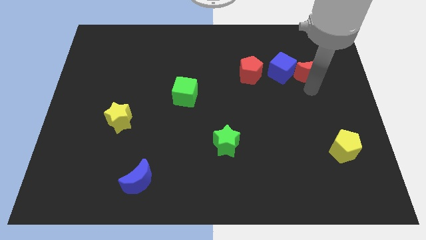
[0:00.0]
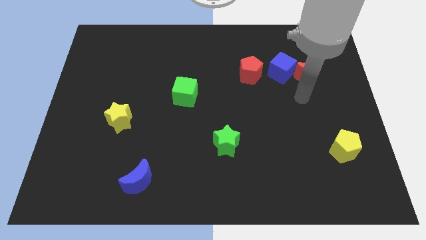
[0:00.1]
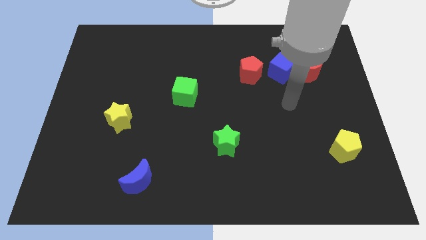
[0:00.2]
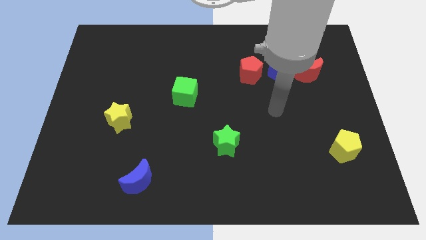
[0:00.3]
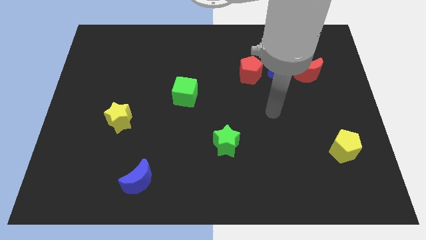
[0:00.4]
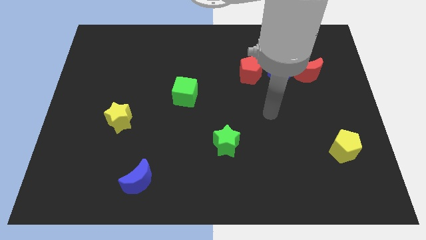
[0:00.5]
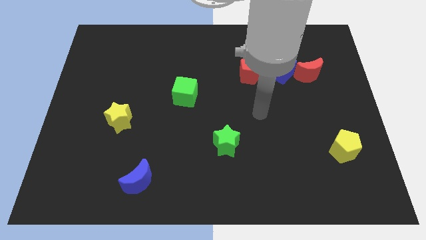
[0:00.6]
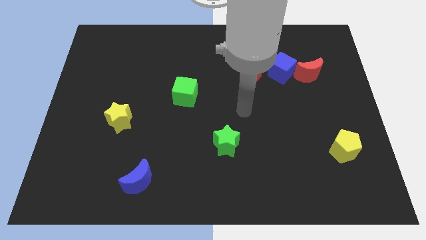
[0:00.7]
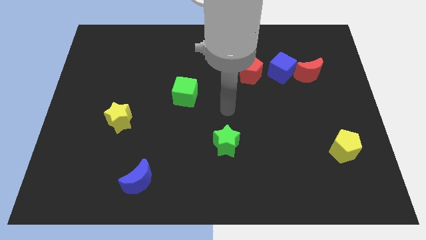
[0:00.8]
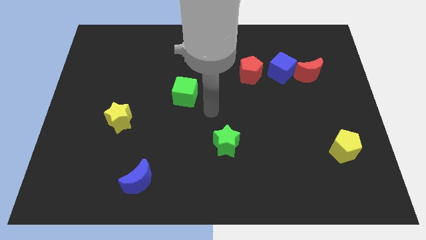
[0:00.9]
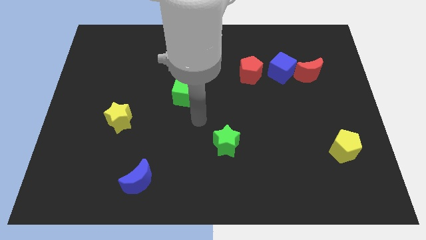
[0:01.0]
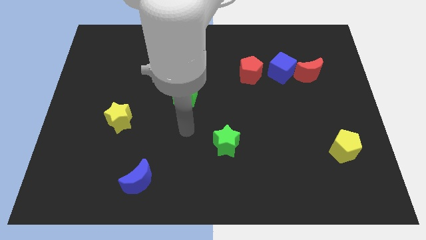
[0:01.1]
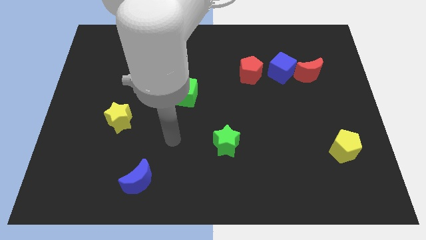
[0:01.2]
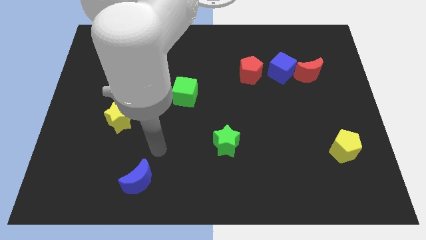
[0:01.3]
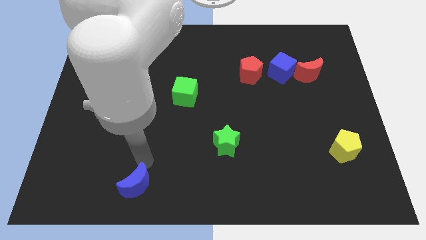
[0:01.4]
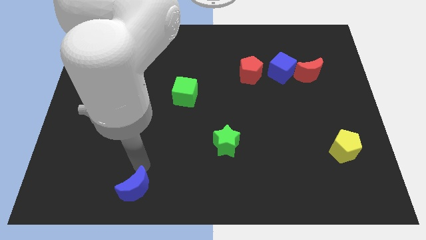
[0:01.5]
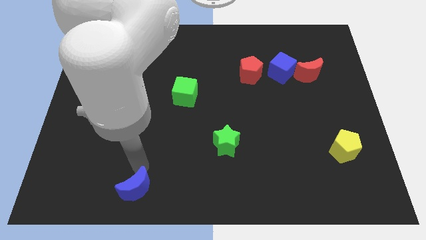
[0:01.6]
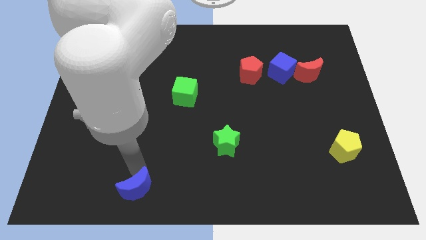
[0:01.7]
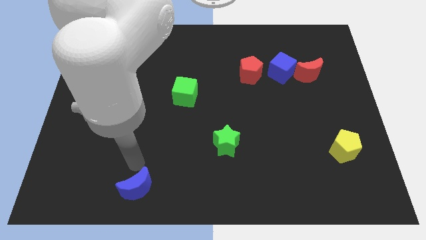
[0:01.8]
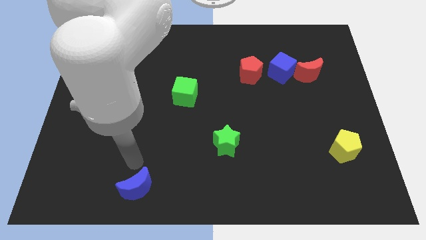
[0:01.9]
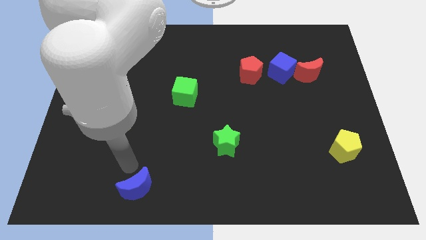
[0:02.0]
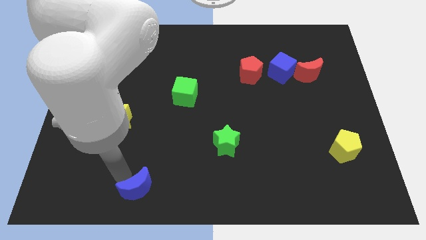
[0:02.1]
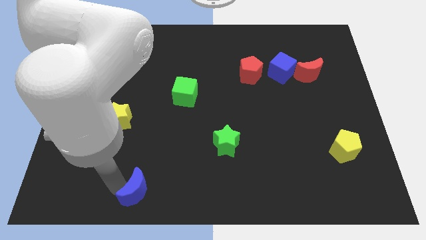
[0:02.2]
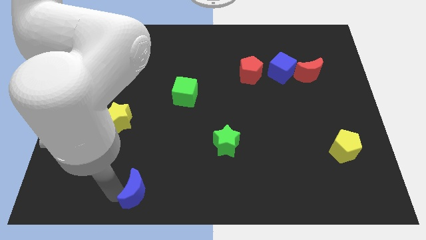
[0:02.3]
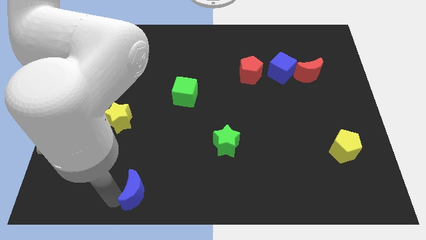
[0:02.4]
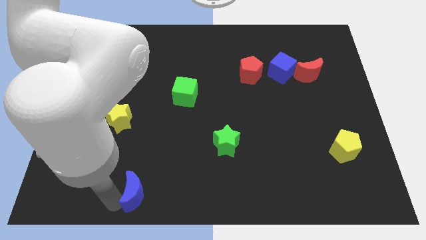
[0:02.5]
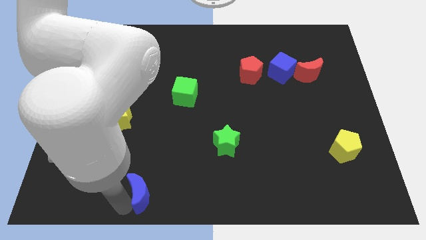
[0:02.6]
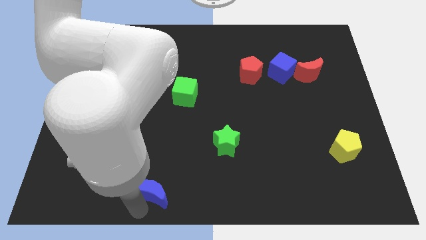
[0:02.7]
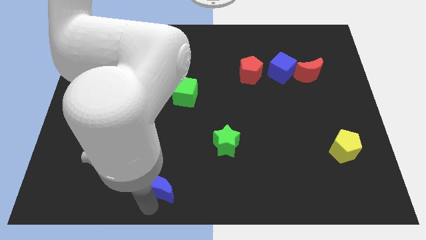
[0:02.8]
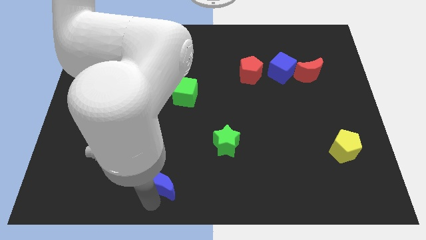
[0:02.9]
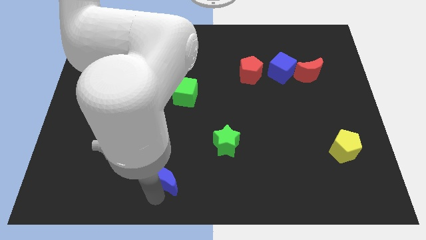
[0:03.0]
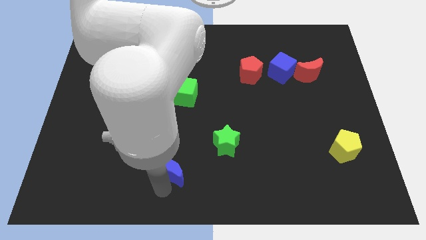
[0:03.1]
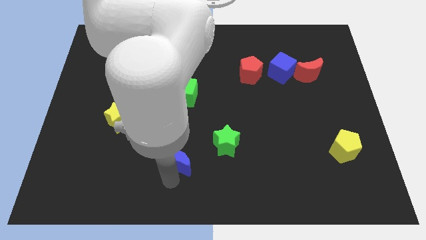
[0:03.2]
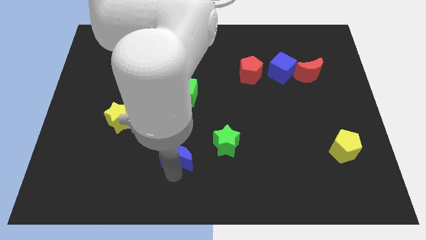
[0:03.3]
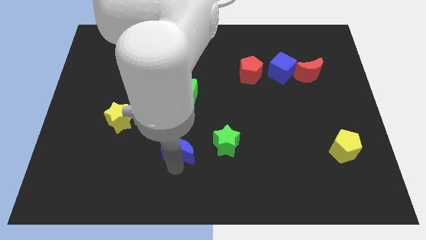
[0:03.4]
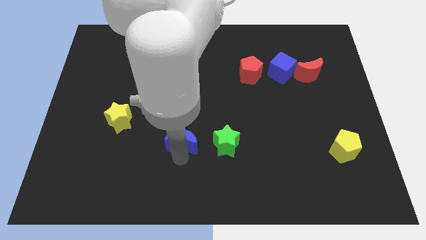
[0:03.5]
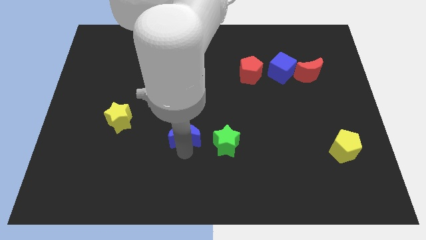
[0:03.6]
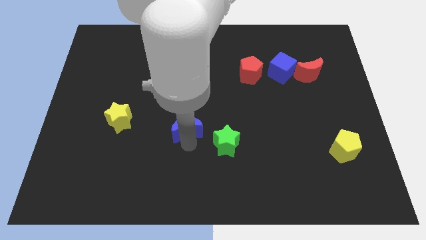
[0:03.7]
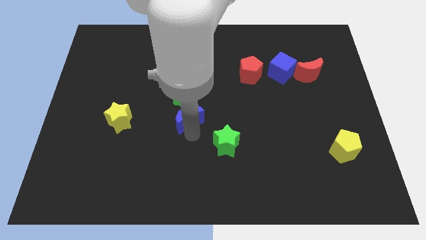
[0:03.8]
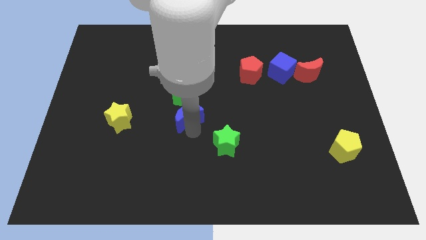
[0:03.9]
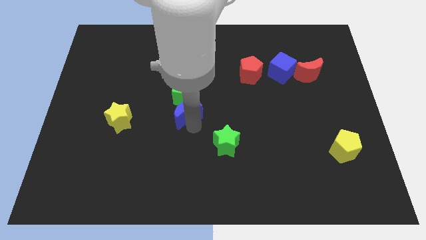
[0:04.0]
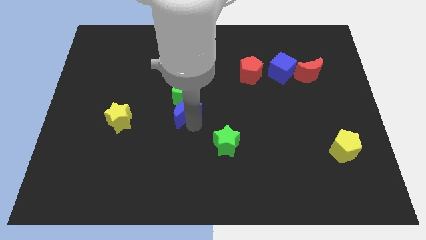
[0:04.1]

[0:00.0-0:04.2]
move the blue moon vertically to the bottom of the green cube

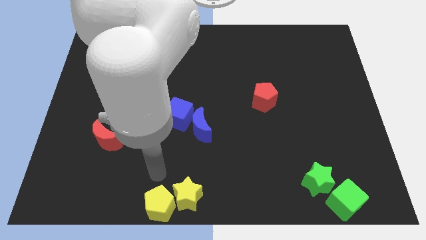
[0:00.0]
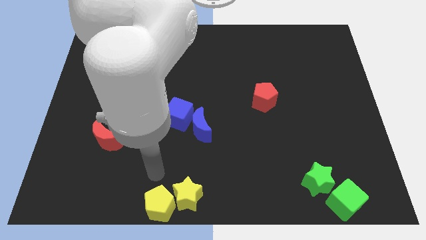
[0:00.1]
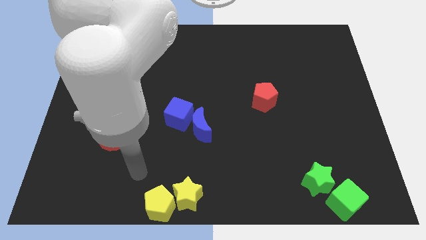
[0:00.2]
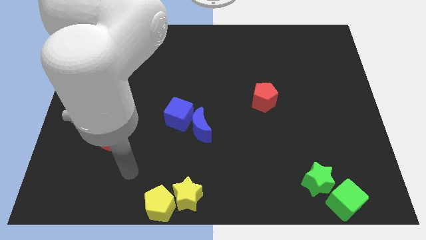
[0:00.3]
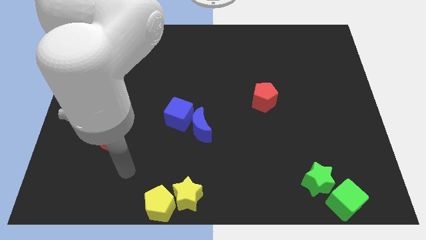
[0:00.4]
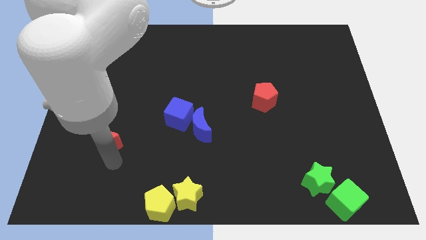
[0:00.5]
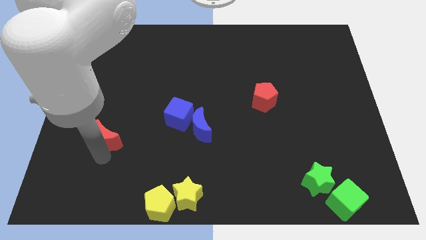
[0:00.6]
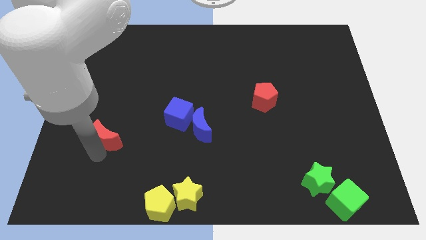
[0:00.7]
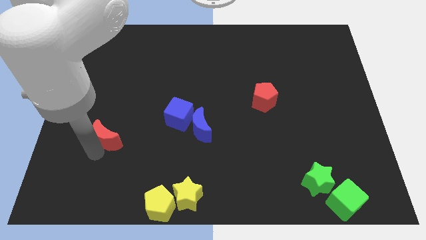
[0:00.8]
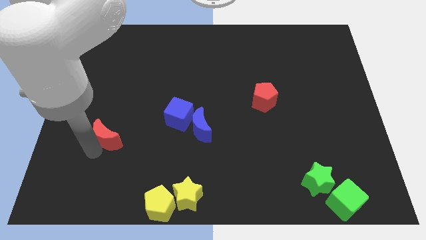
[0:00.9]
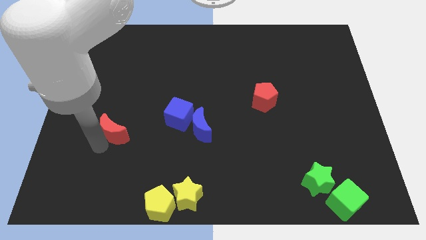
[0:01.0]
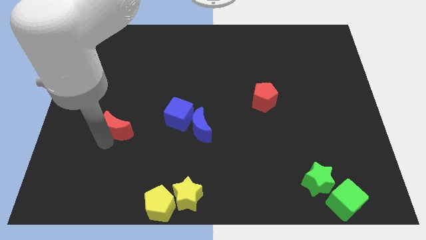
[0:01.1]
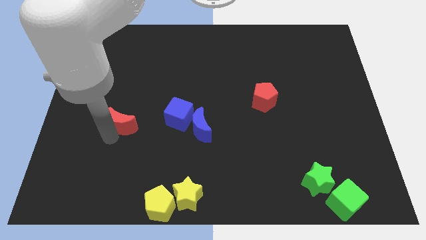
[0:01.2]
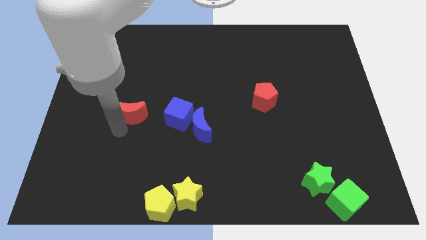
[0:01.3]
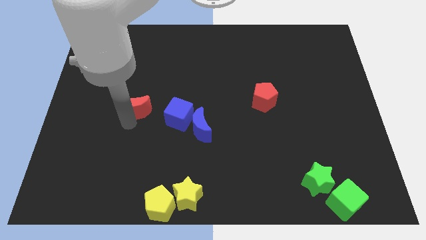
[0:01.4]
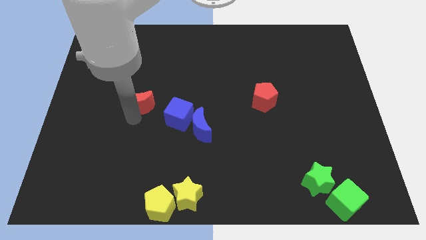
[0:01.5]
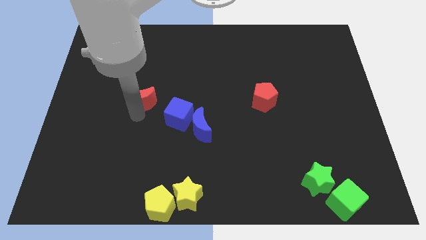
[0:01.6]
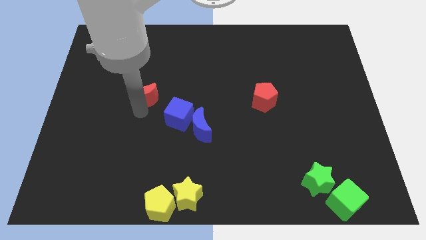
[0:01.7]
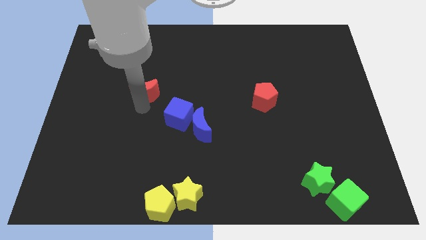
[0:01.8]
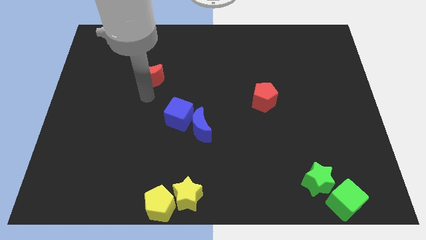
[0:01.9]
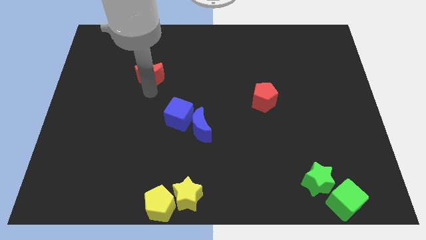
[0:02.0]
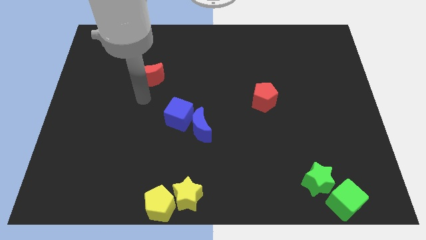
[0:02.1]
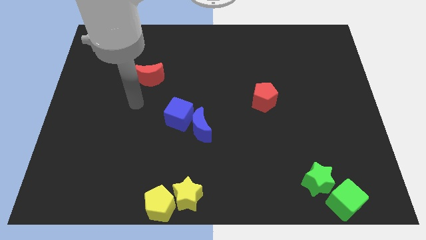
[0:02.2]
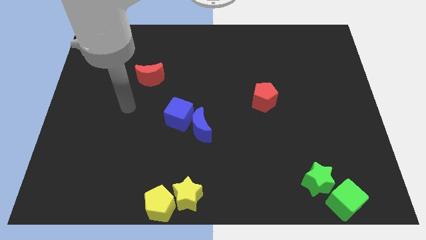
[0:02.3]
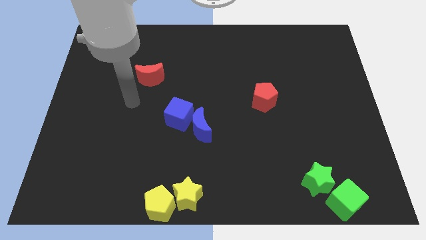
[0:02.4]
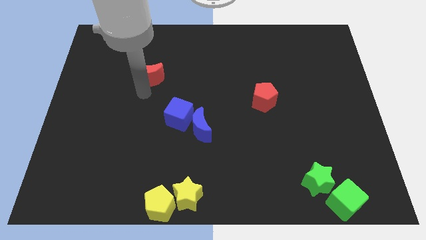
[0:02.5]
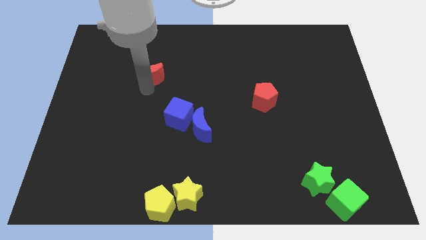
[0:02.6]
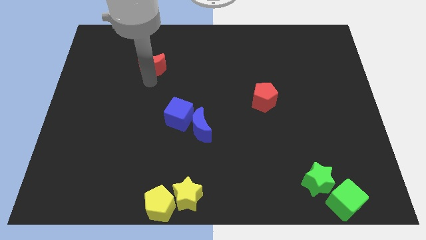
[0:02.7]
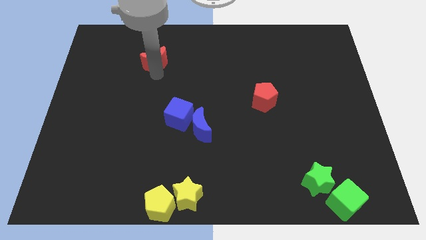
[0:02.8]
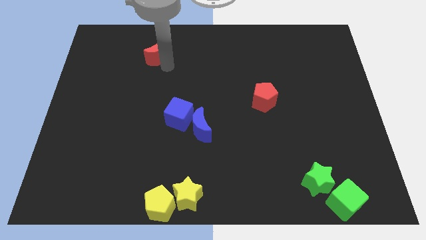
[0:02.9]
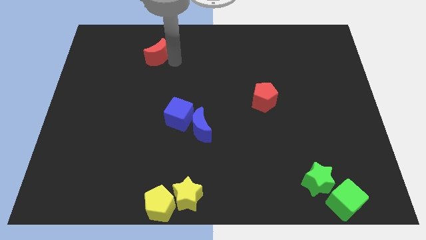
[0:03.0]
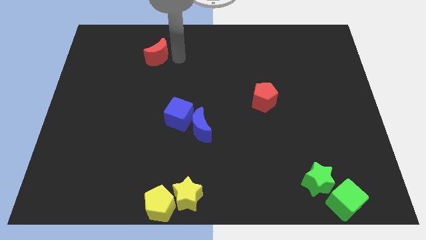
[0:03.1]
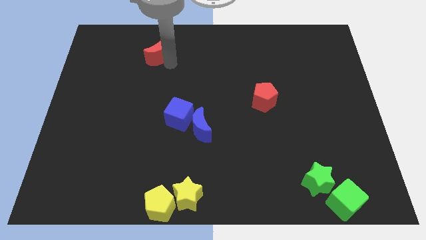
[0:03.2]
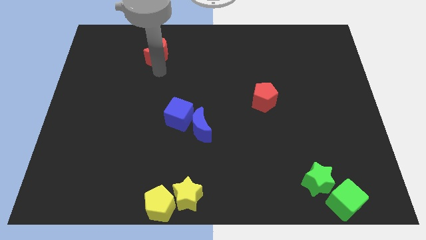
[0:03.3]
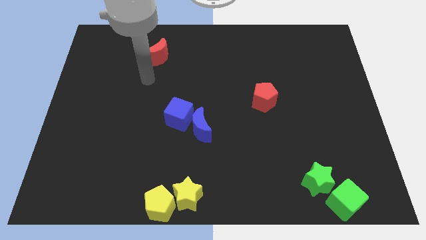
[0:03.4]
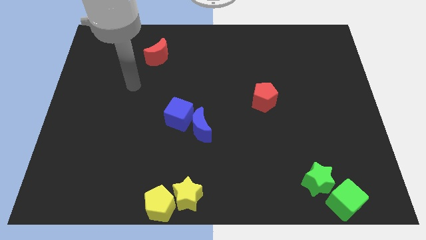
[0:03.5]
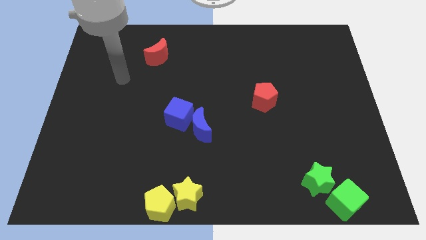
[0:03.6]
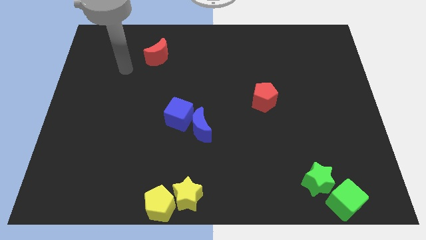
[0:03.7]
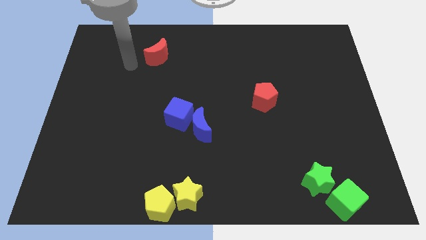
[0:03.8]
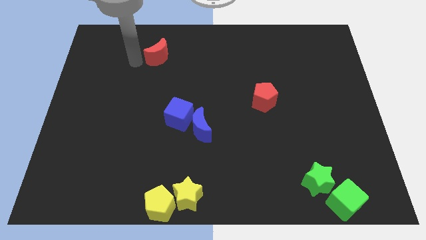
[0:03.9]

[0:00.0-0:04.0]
move the red moon to the top side of the table

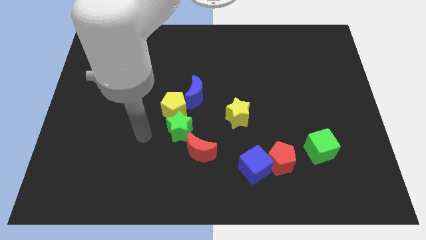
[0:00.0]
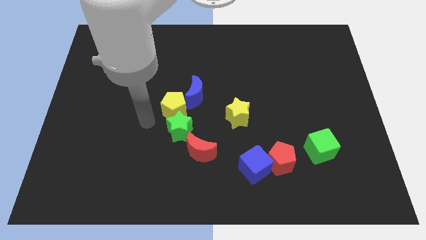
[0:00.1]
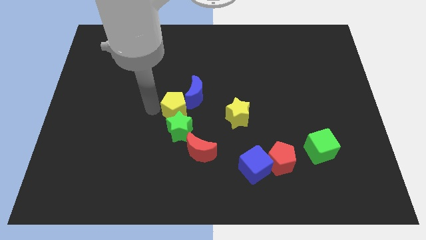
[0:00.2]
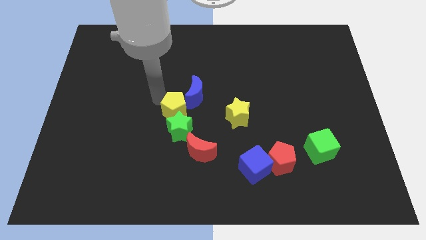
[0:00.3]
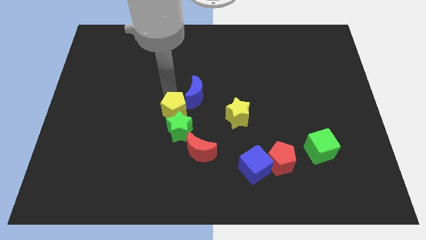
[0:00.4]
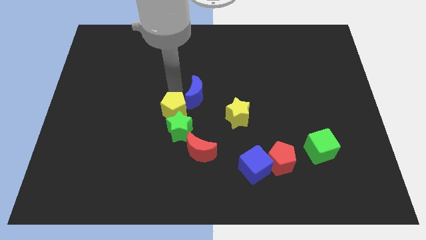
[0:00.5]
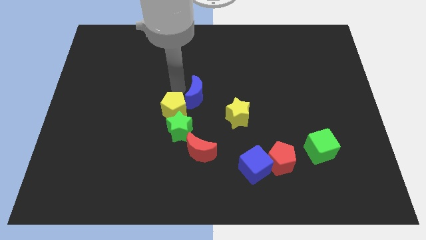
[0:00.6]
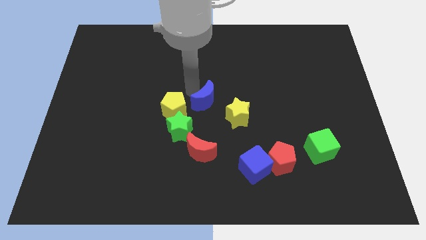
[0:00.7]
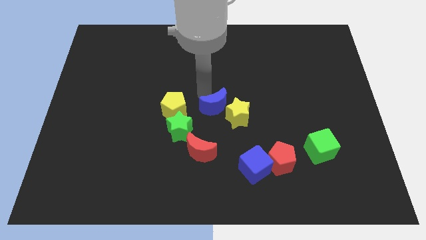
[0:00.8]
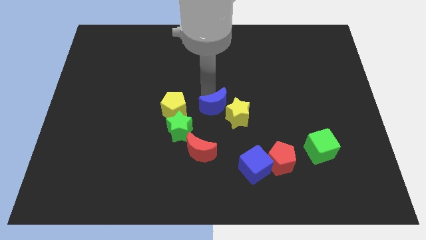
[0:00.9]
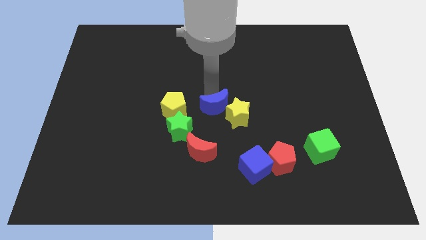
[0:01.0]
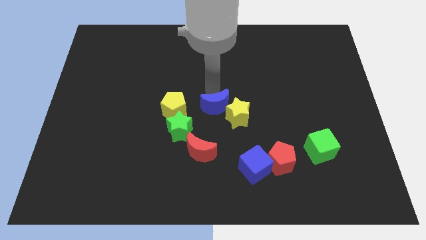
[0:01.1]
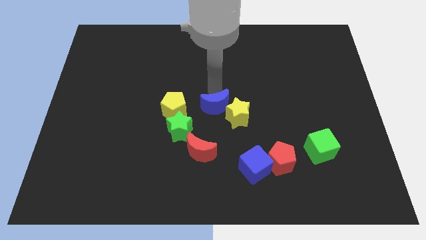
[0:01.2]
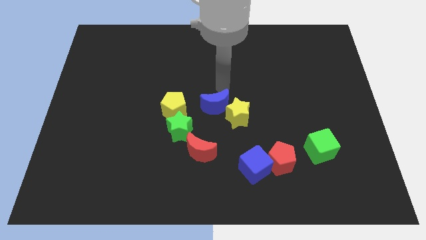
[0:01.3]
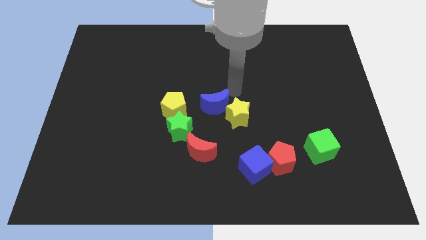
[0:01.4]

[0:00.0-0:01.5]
place blue moon to the right of yellow pentagon
